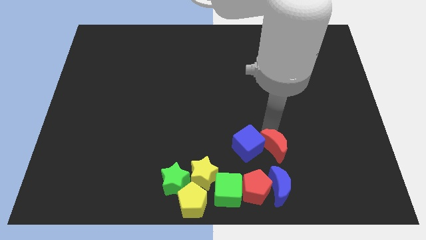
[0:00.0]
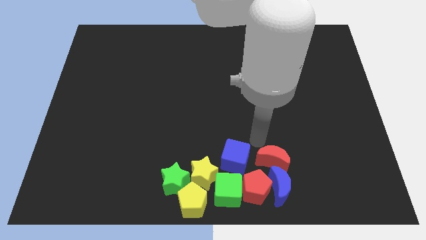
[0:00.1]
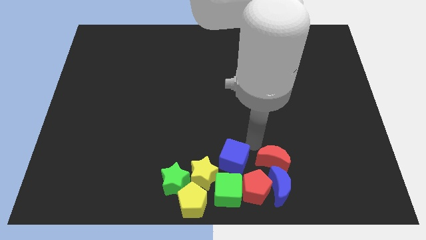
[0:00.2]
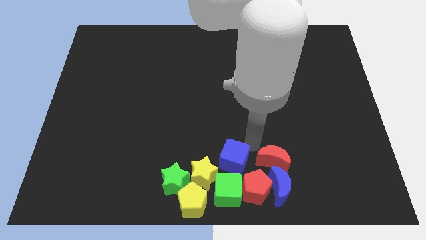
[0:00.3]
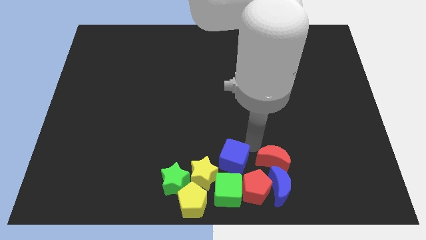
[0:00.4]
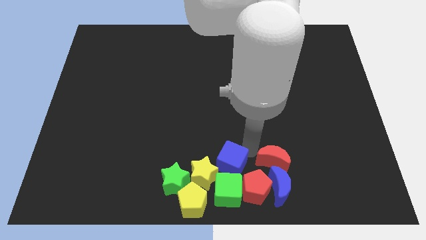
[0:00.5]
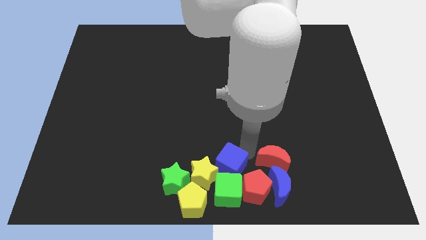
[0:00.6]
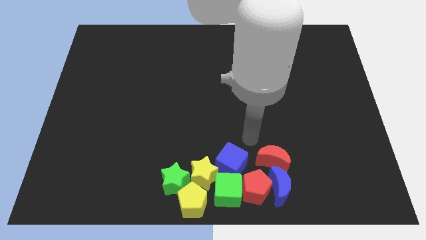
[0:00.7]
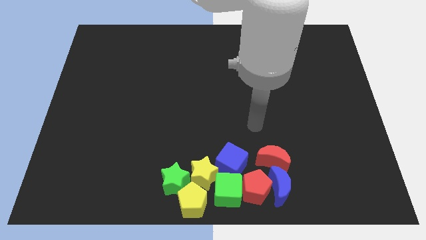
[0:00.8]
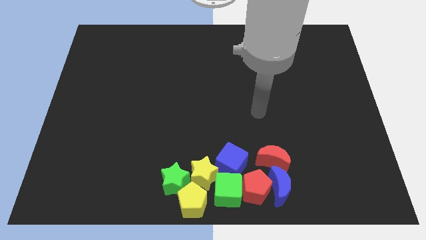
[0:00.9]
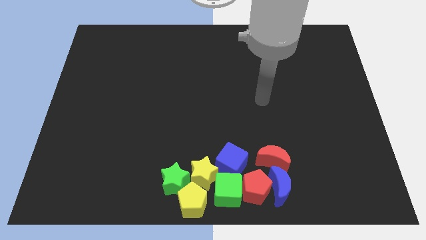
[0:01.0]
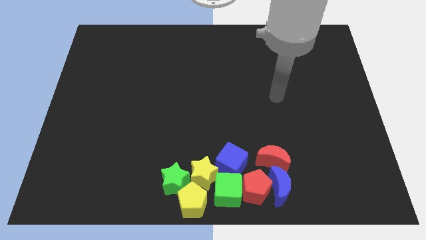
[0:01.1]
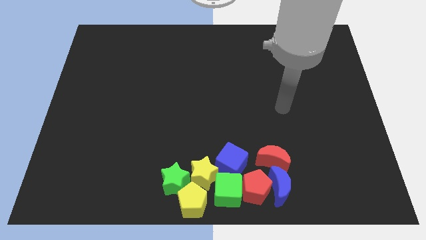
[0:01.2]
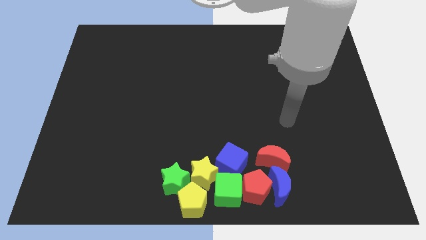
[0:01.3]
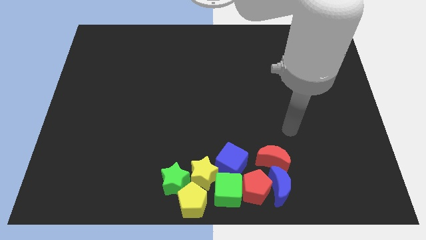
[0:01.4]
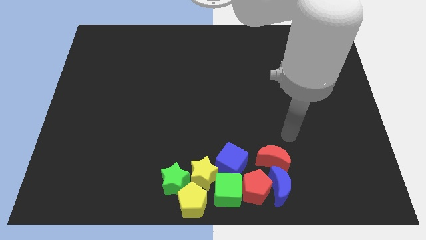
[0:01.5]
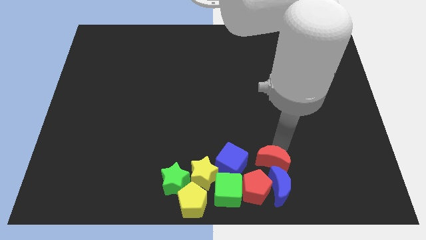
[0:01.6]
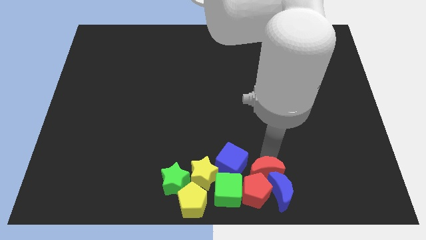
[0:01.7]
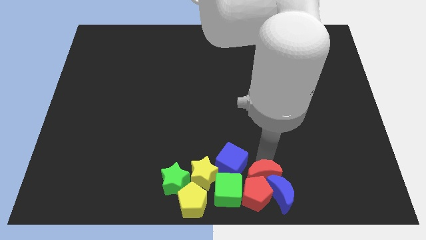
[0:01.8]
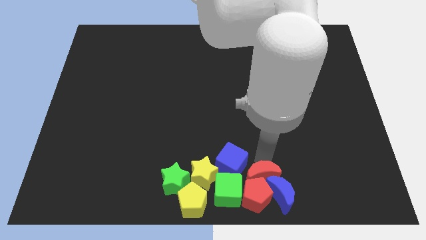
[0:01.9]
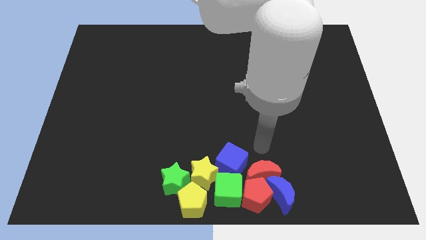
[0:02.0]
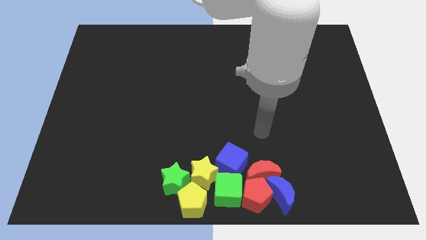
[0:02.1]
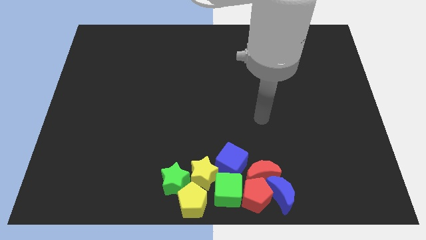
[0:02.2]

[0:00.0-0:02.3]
push the red crescent into the group of blocks

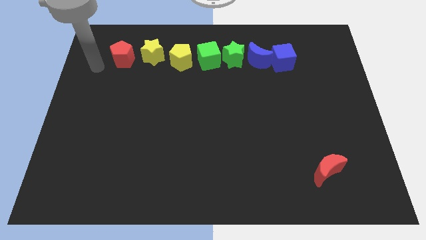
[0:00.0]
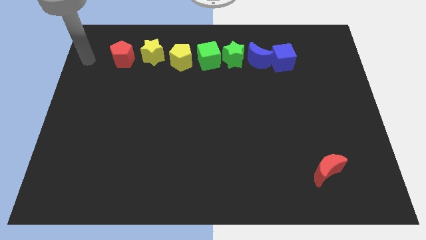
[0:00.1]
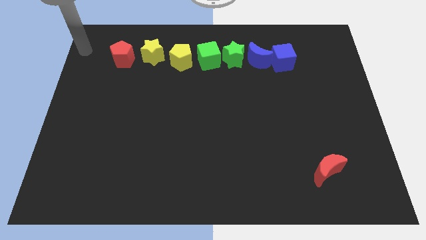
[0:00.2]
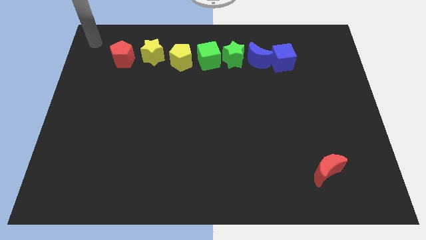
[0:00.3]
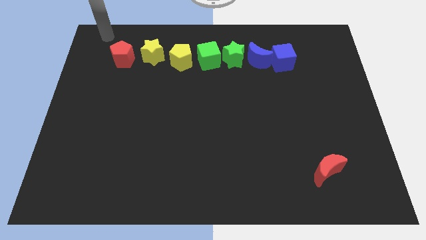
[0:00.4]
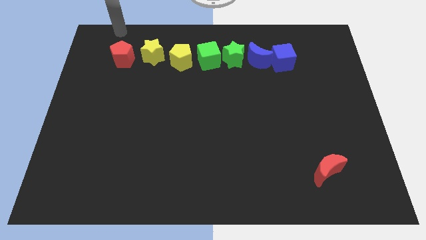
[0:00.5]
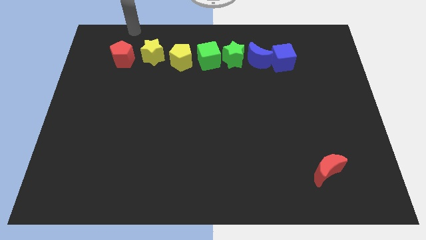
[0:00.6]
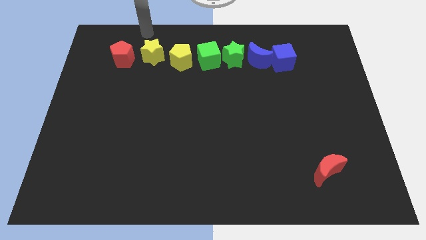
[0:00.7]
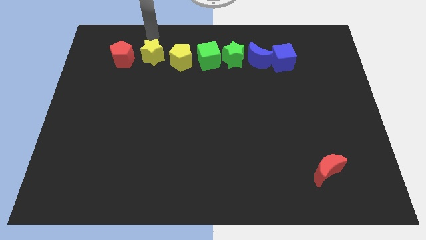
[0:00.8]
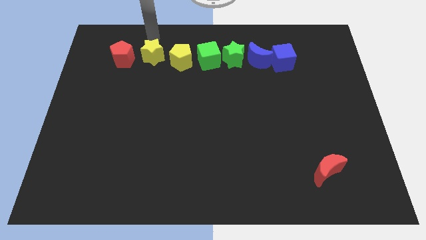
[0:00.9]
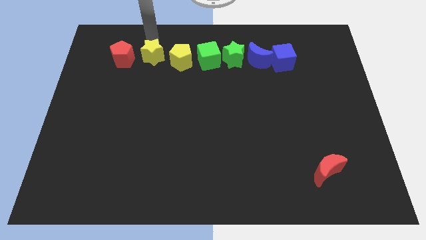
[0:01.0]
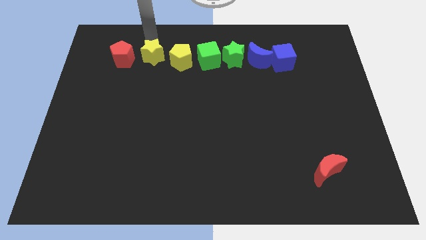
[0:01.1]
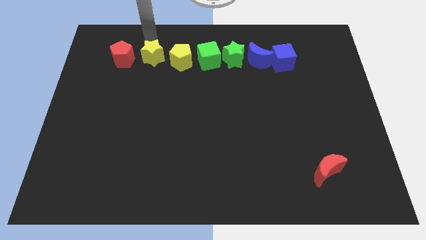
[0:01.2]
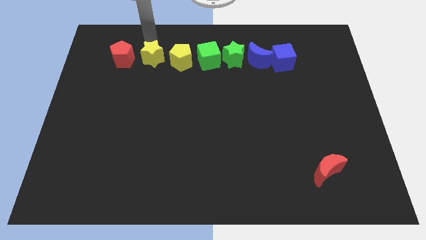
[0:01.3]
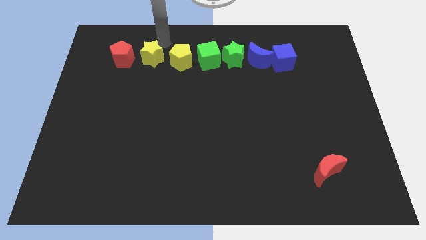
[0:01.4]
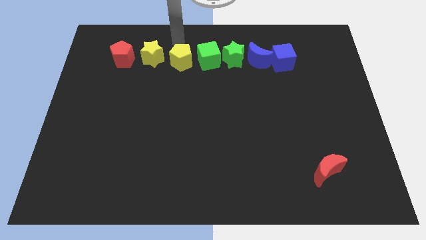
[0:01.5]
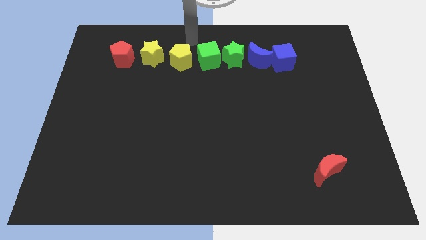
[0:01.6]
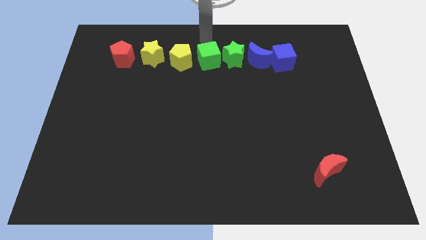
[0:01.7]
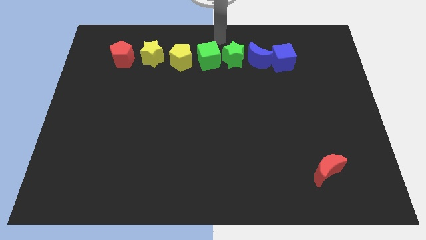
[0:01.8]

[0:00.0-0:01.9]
place the red pentagon towards the left side of the yellow star

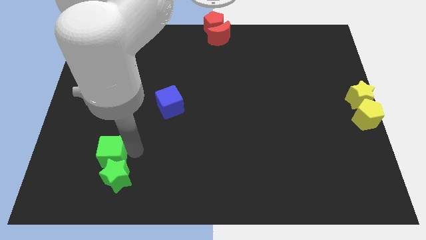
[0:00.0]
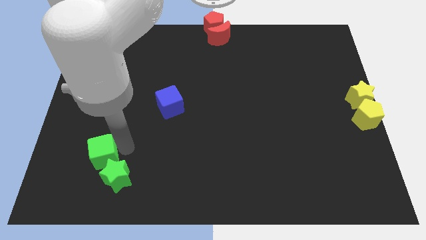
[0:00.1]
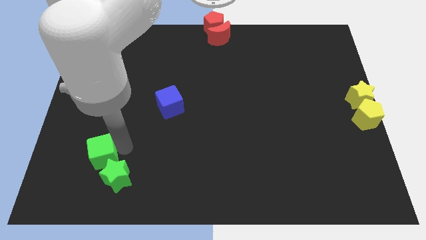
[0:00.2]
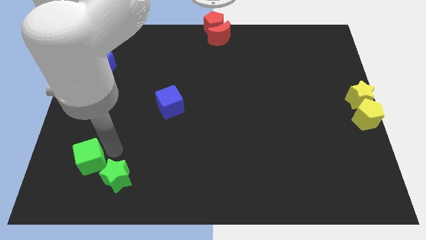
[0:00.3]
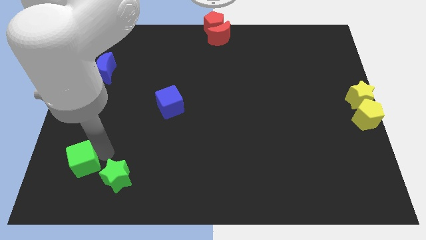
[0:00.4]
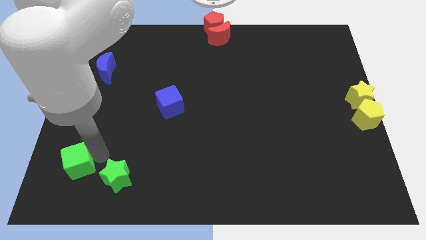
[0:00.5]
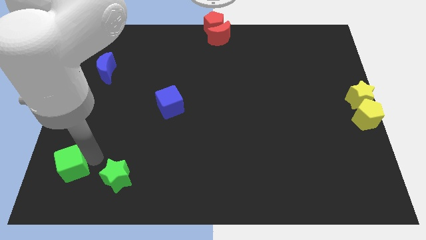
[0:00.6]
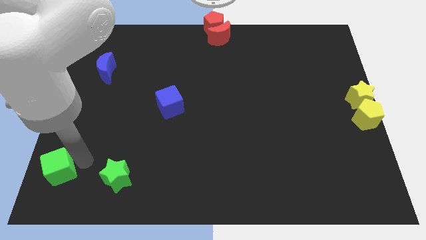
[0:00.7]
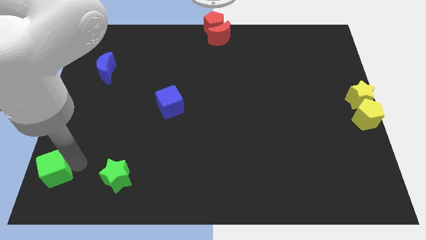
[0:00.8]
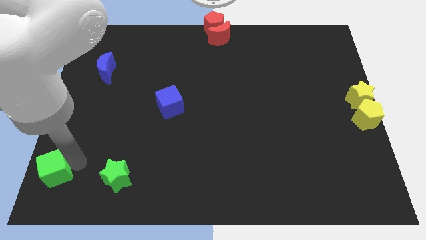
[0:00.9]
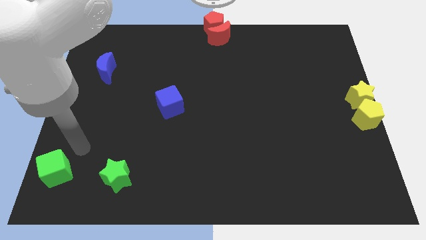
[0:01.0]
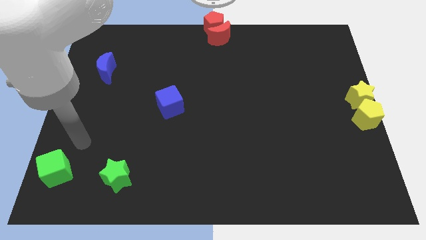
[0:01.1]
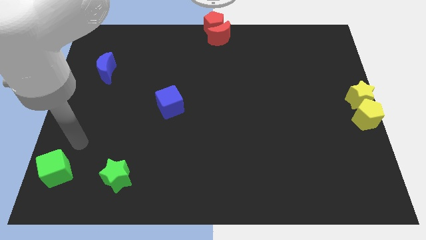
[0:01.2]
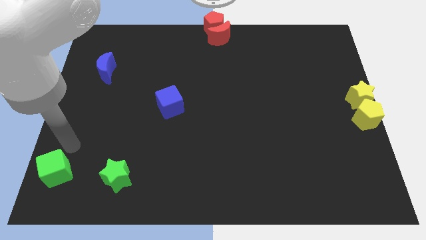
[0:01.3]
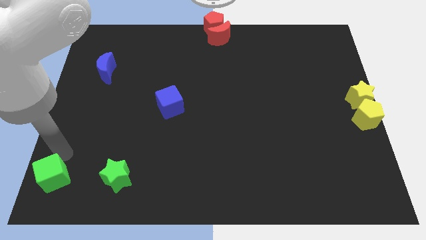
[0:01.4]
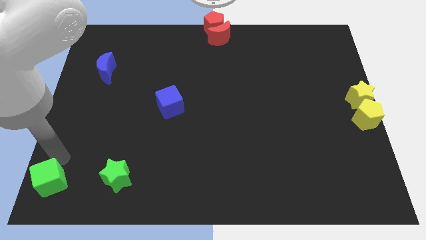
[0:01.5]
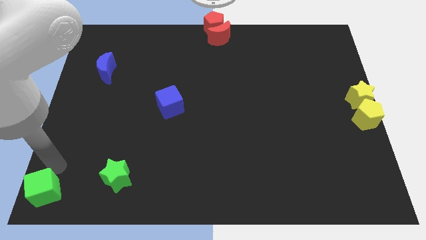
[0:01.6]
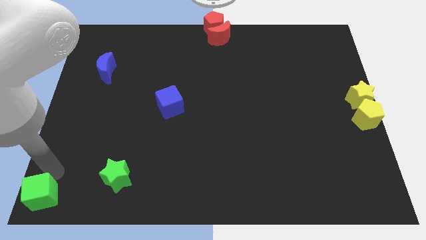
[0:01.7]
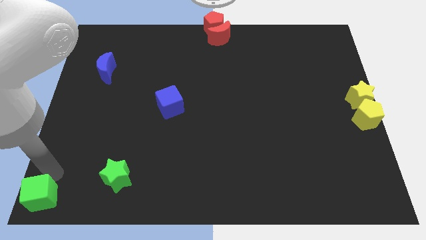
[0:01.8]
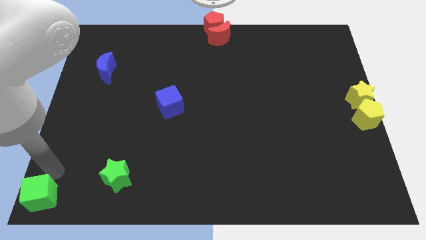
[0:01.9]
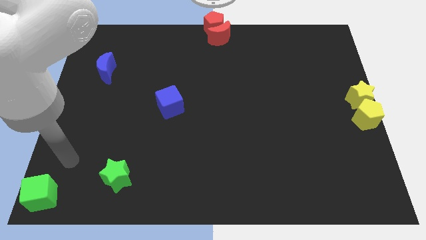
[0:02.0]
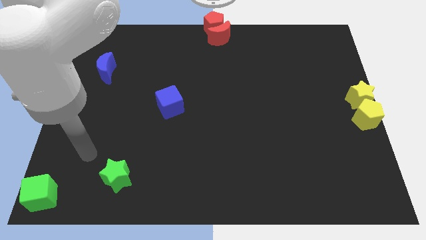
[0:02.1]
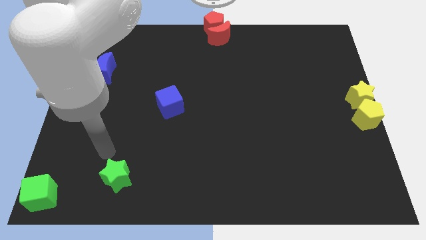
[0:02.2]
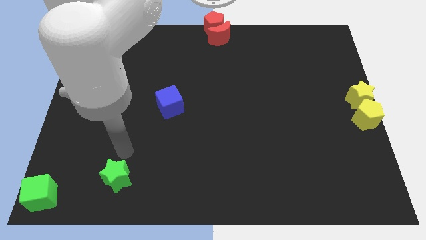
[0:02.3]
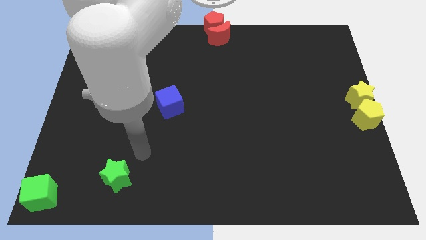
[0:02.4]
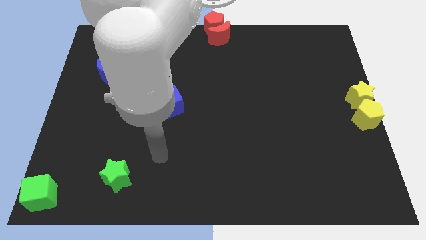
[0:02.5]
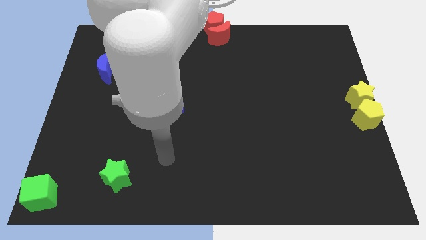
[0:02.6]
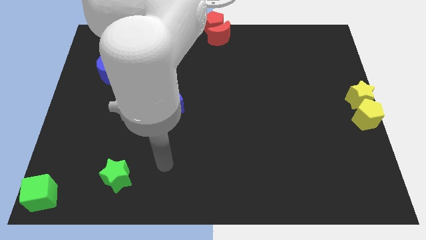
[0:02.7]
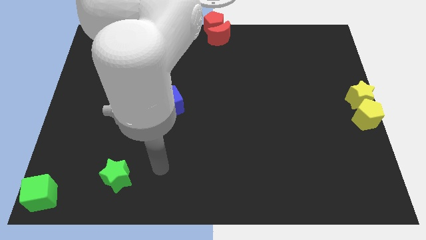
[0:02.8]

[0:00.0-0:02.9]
place the green cube at the bottom left corner of the board

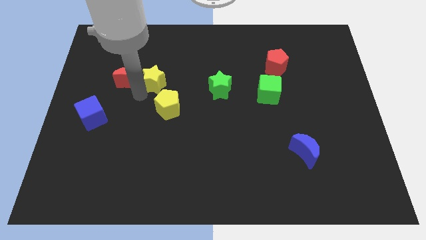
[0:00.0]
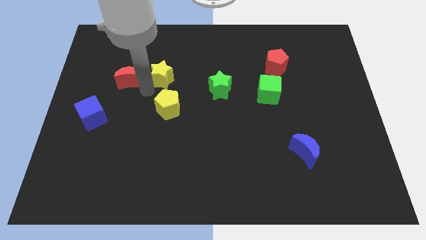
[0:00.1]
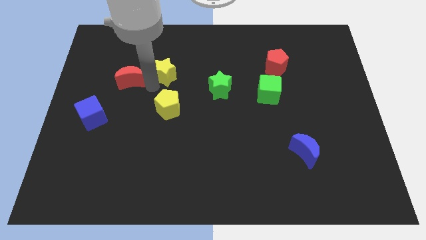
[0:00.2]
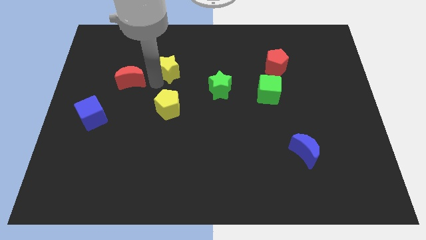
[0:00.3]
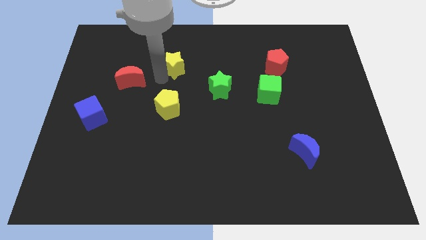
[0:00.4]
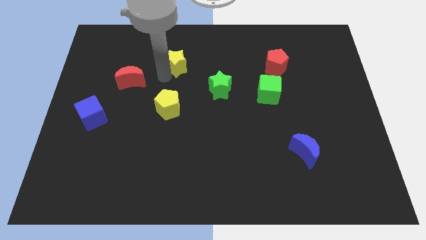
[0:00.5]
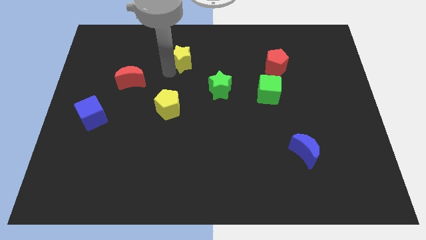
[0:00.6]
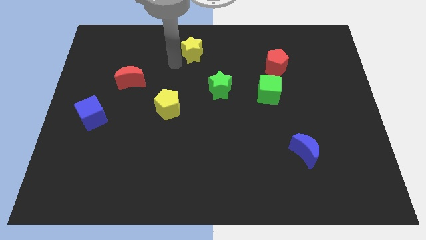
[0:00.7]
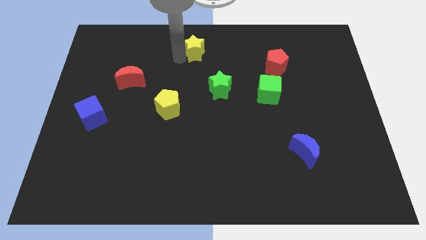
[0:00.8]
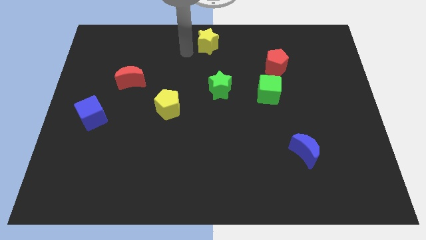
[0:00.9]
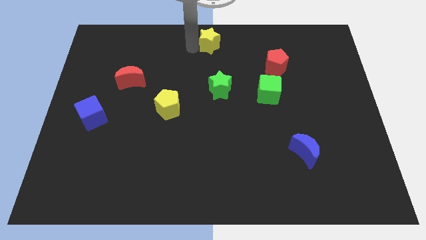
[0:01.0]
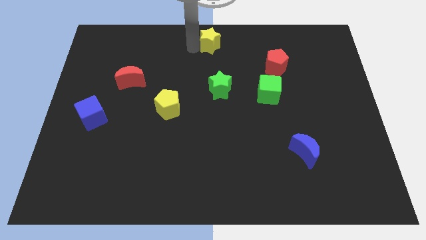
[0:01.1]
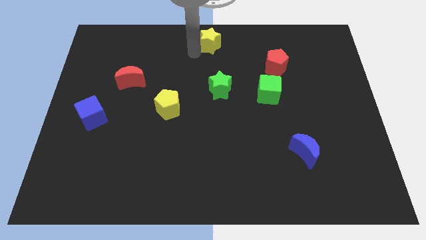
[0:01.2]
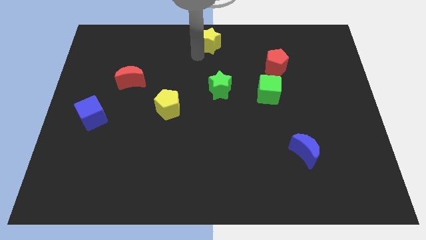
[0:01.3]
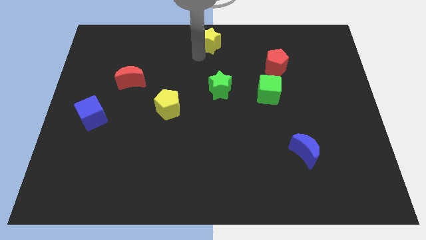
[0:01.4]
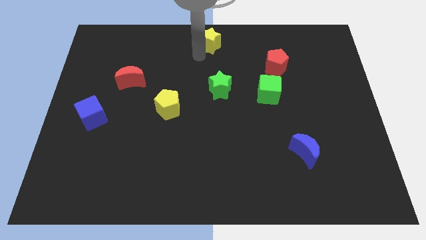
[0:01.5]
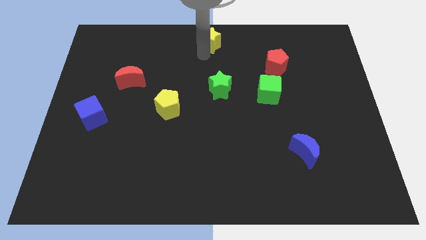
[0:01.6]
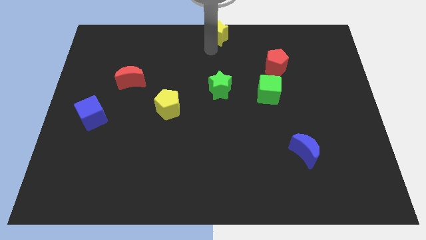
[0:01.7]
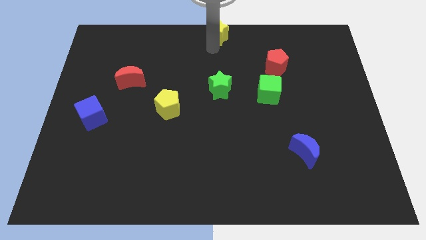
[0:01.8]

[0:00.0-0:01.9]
move the yellow star at the top center of the board
